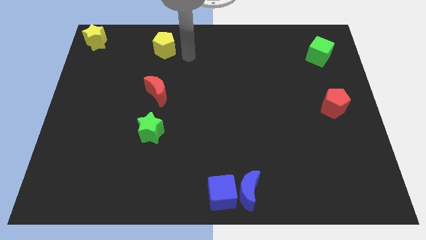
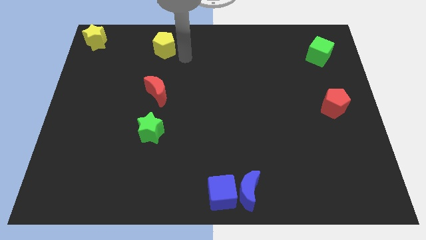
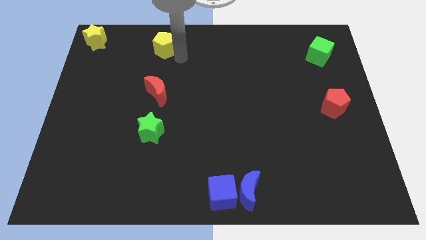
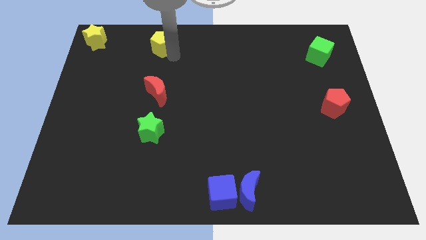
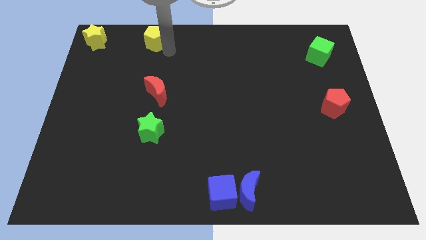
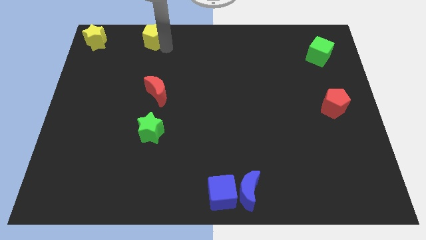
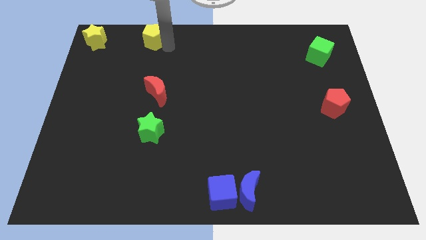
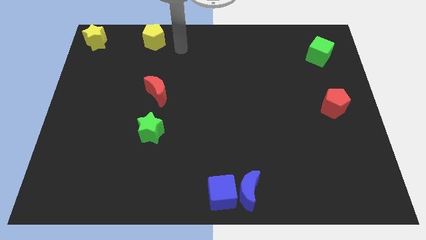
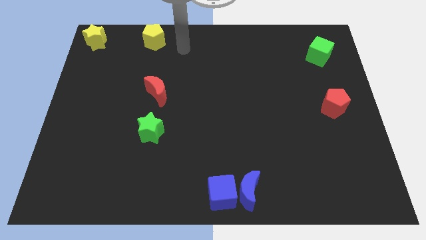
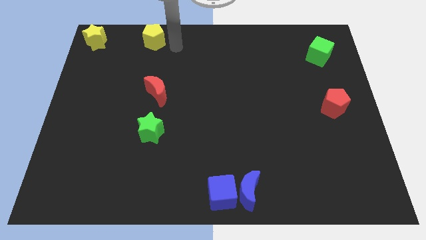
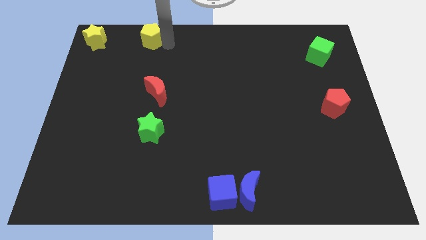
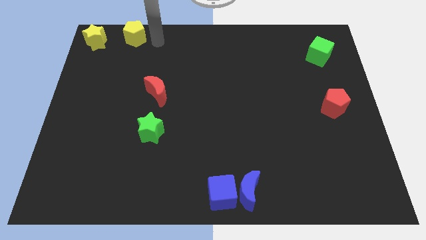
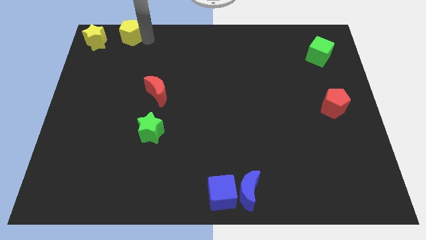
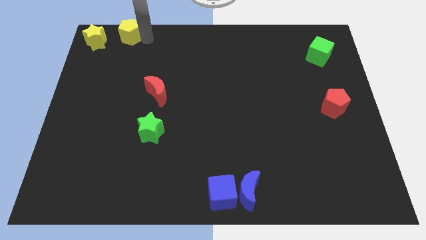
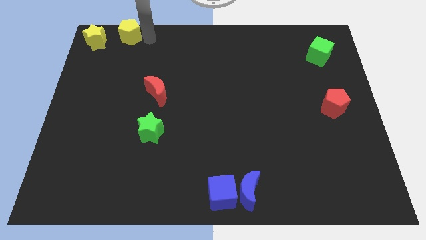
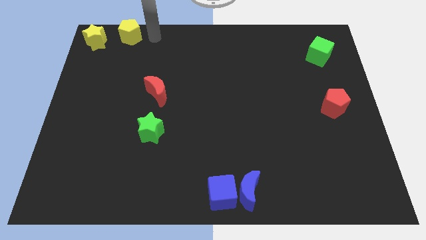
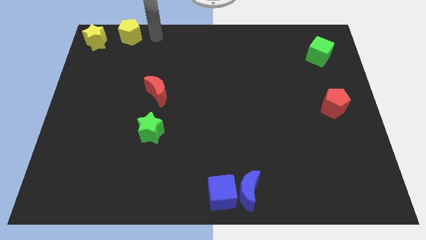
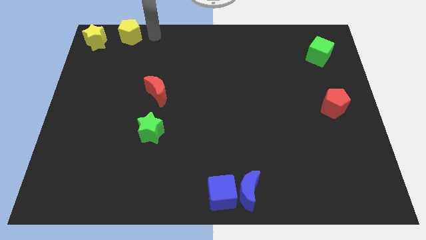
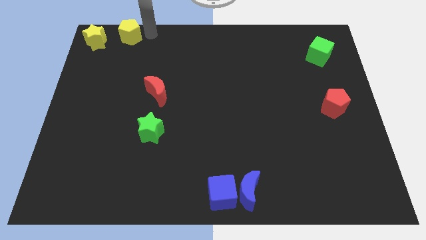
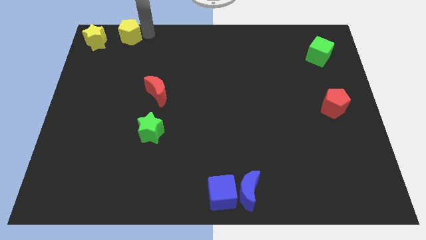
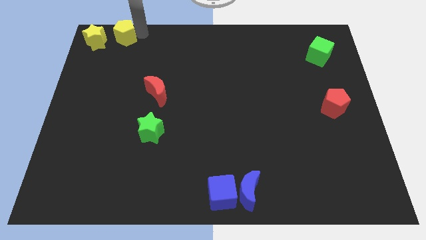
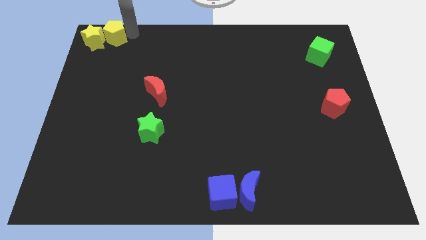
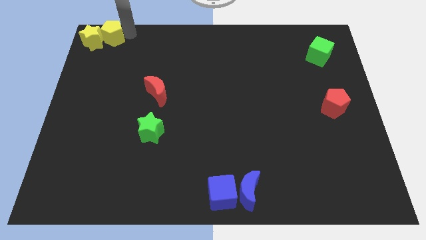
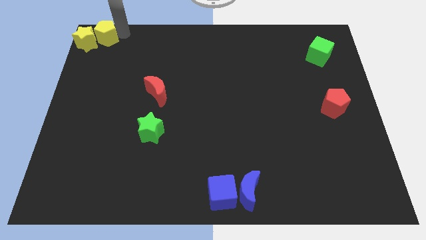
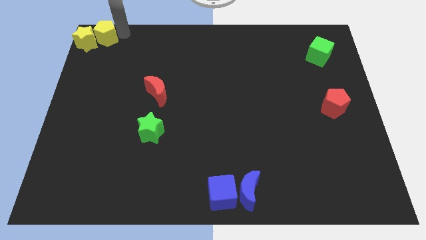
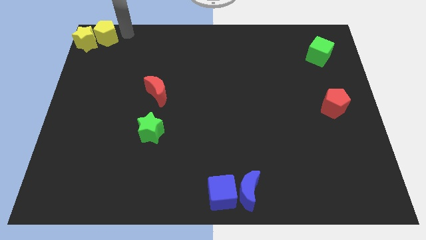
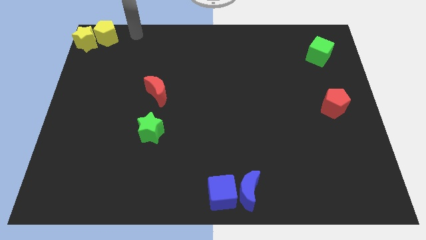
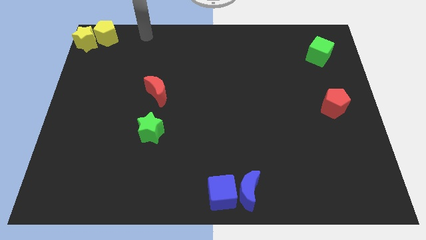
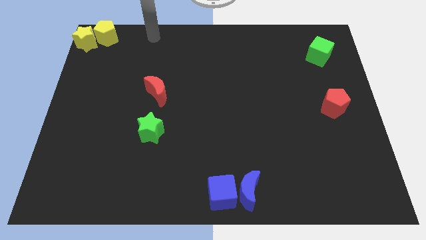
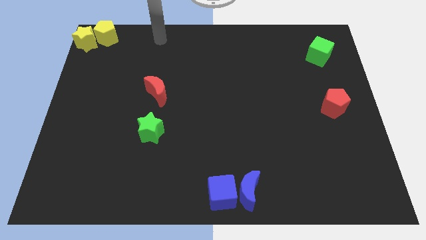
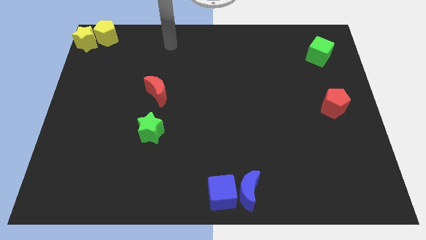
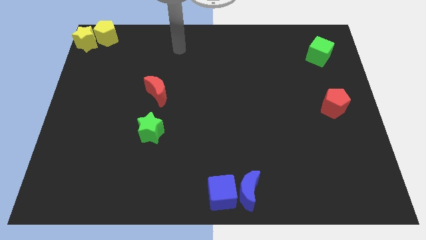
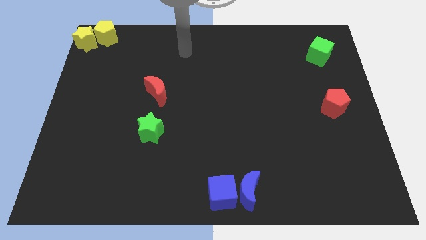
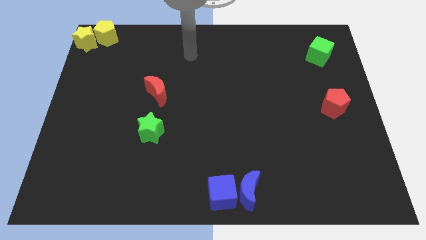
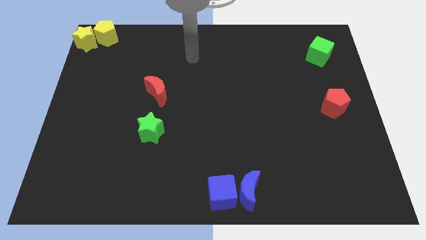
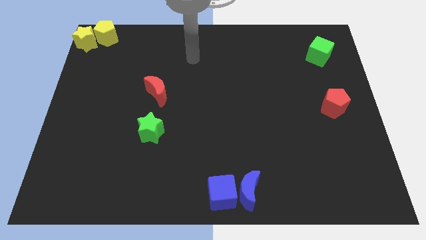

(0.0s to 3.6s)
push the yellow pentagon to the top left

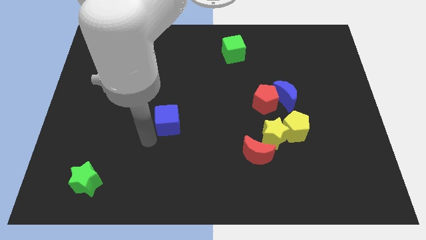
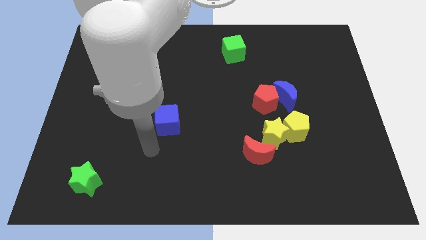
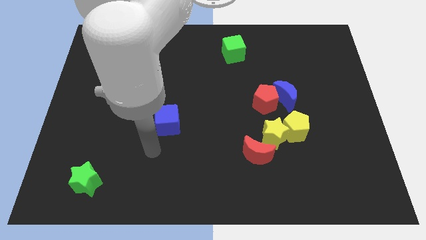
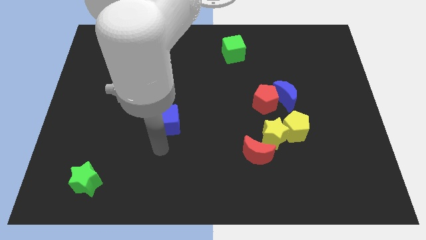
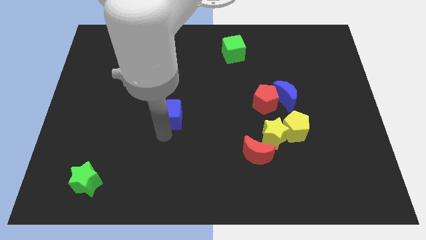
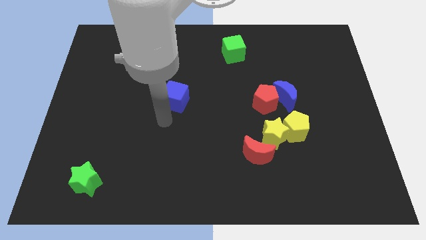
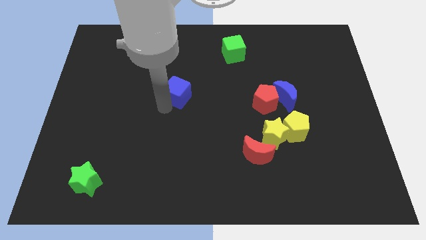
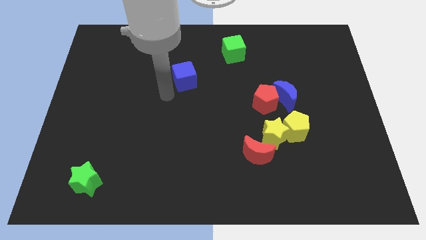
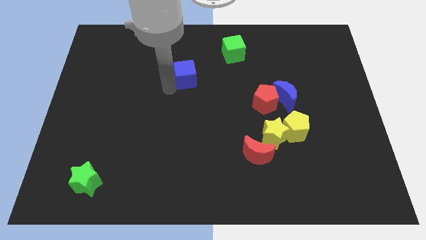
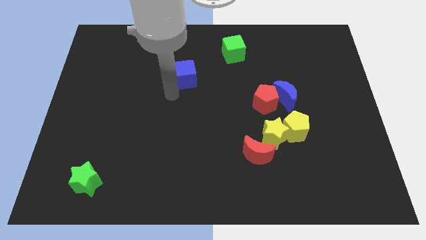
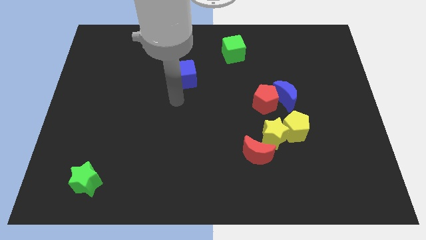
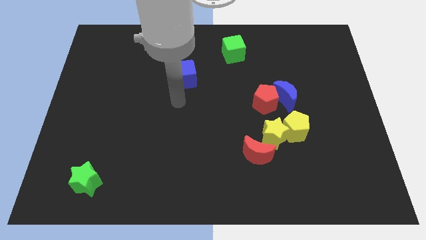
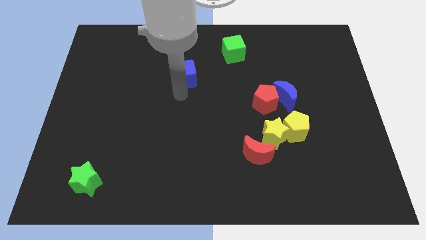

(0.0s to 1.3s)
move the blue cube to the bottom left of the green cube

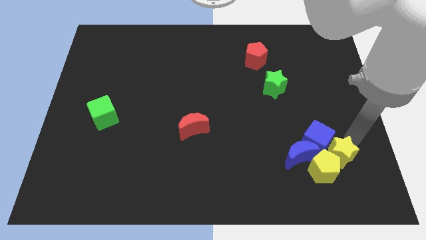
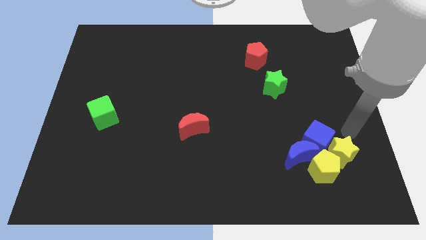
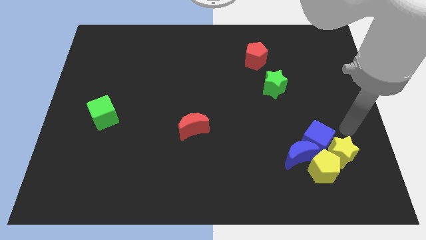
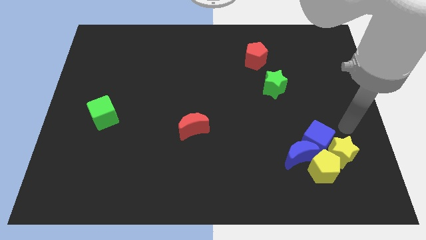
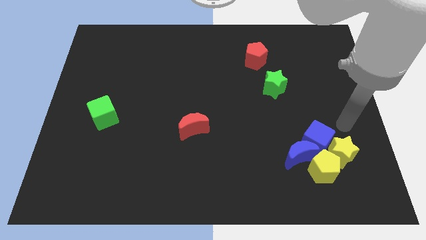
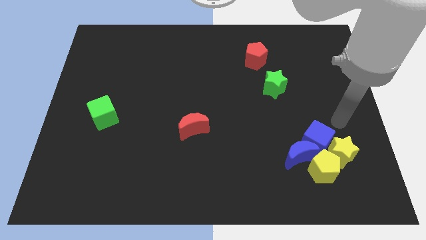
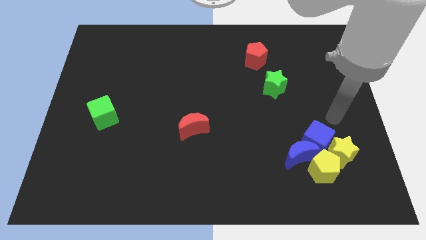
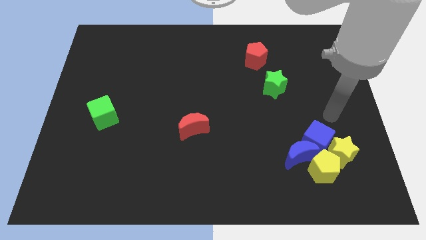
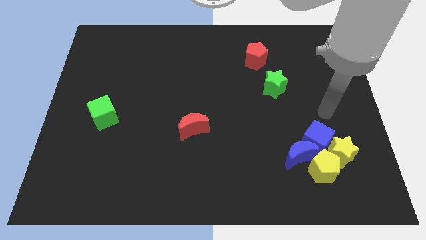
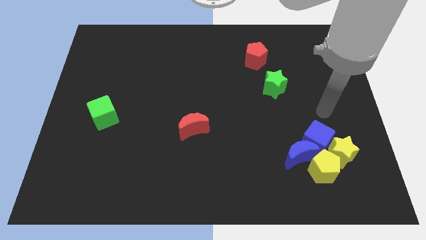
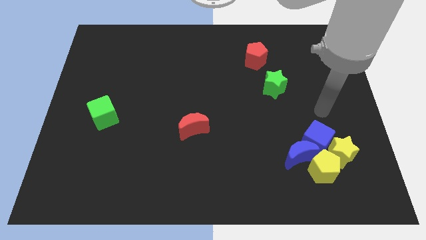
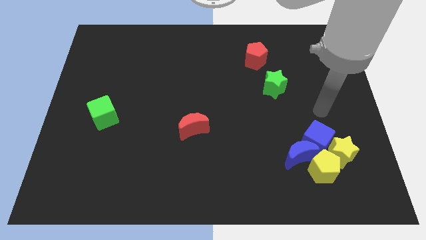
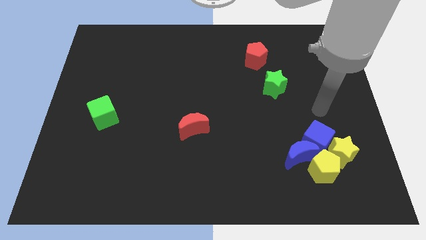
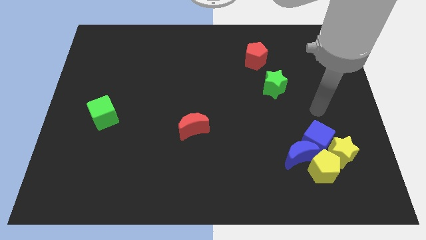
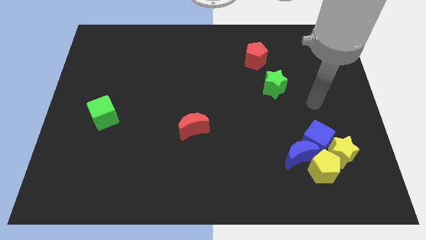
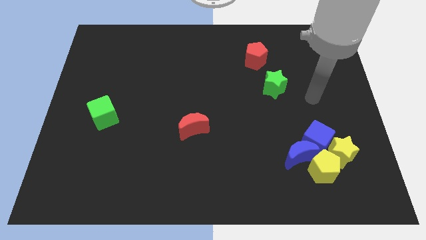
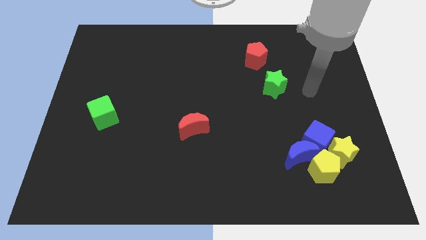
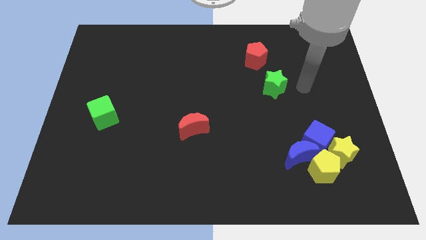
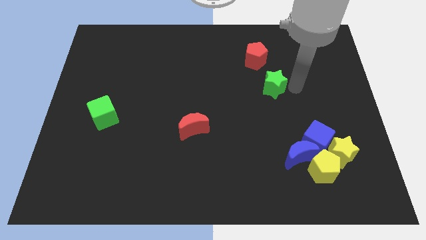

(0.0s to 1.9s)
move your arm close to the right side of the green star

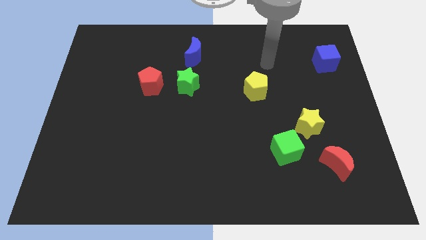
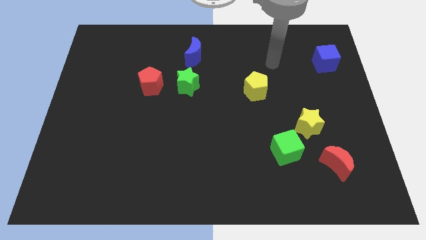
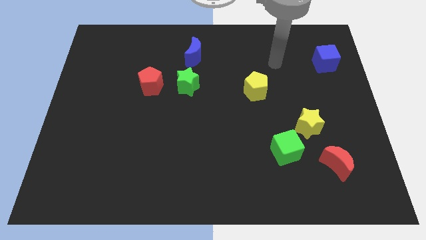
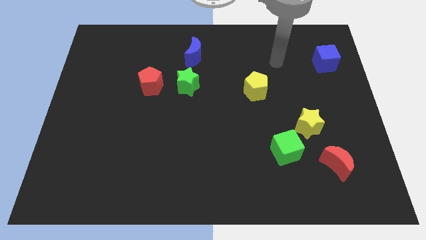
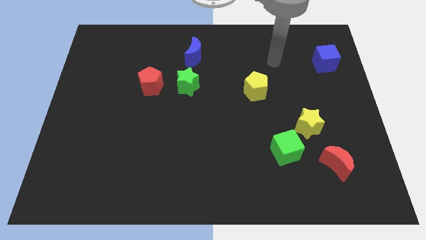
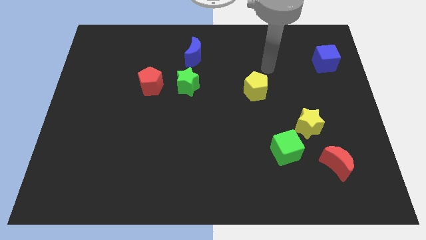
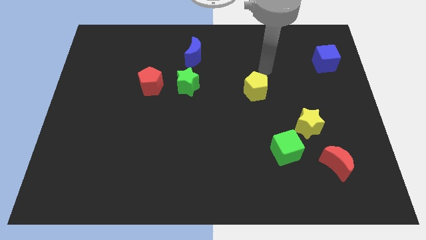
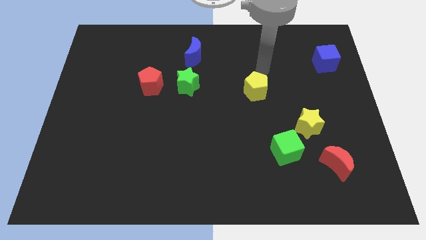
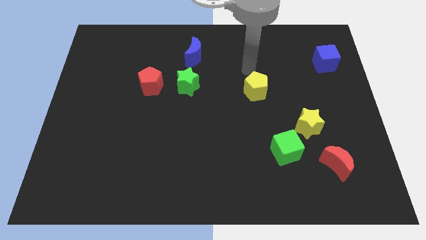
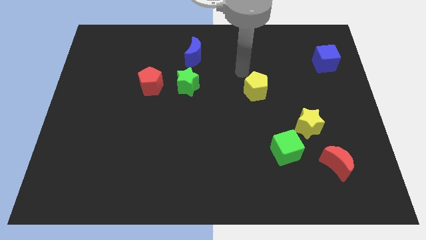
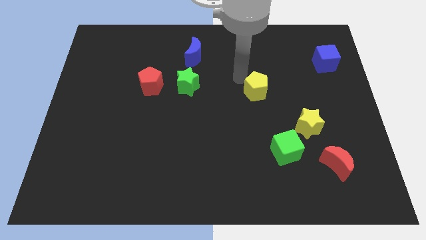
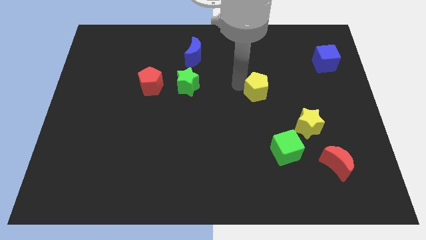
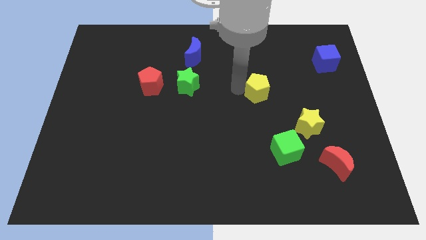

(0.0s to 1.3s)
move your arm towards the yellow pentagon

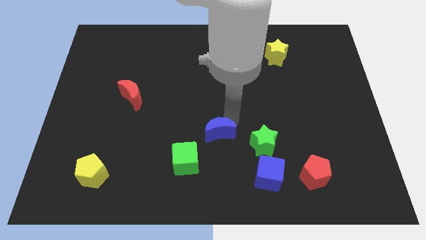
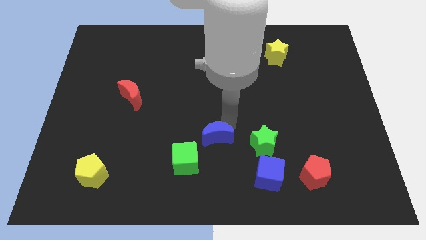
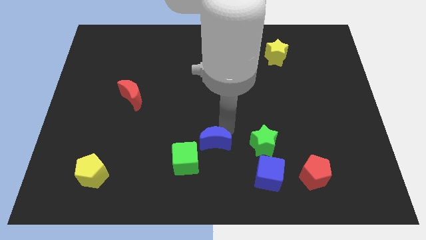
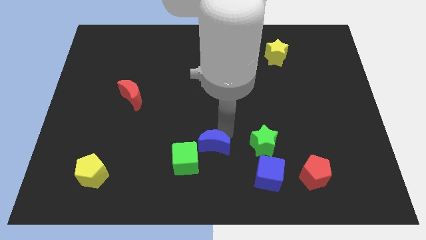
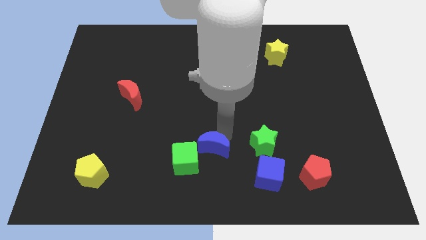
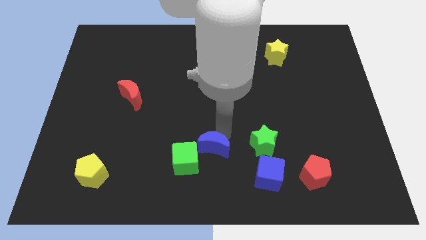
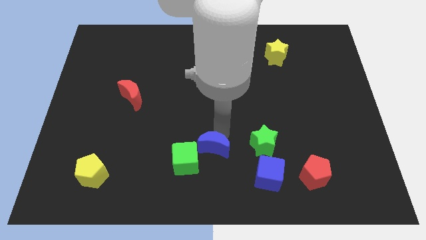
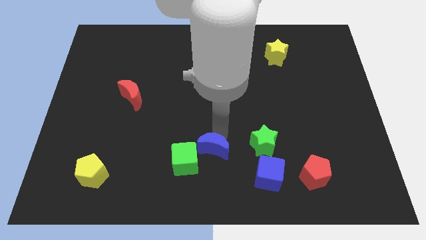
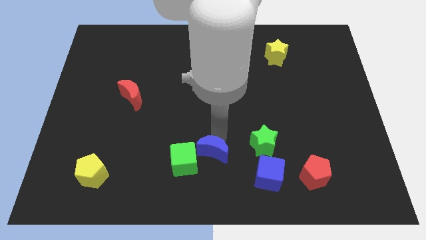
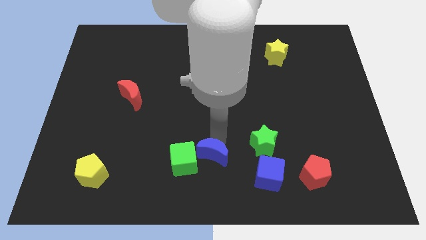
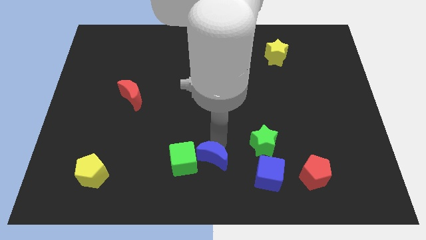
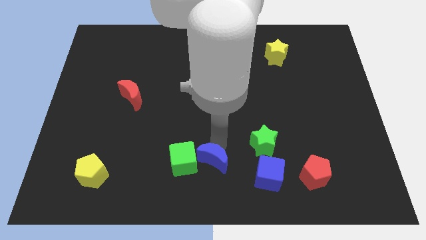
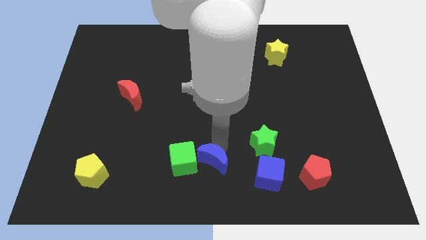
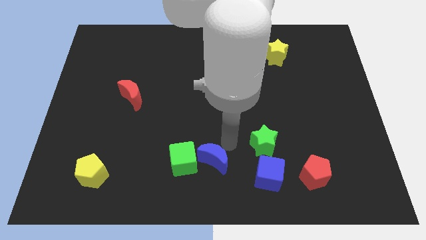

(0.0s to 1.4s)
place the blue crescent right to the green cube
